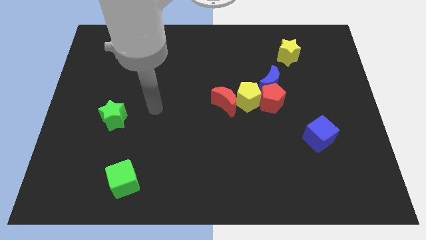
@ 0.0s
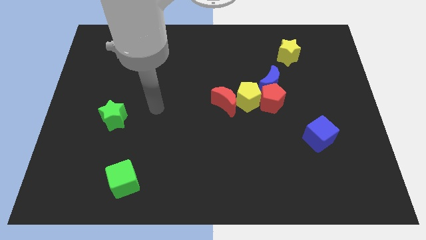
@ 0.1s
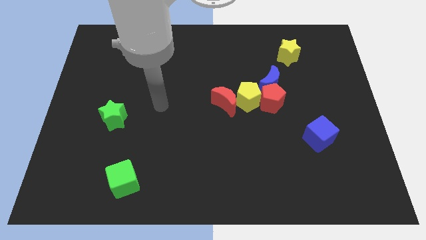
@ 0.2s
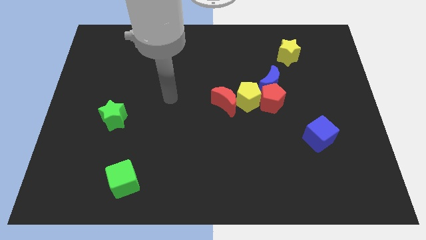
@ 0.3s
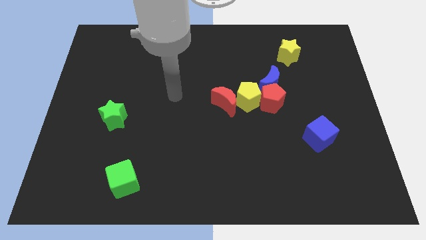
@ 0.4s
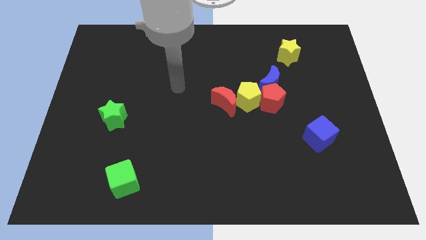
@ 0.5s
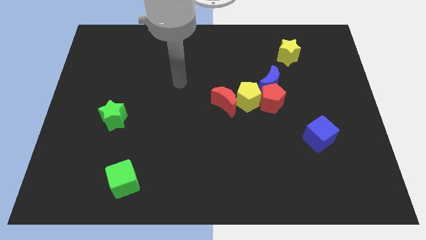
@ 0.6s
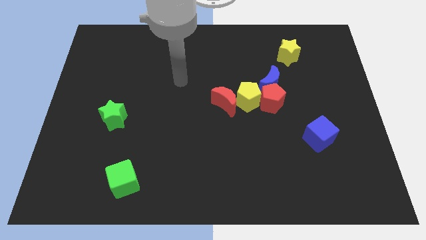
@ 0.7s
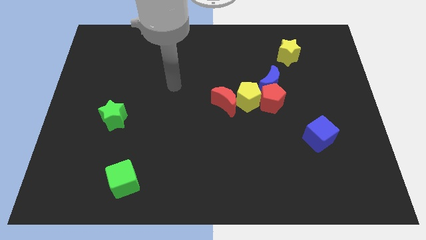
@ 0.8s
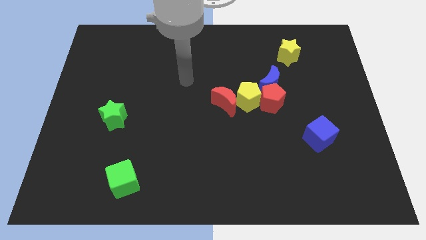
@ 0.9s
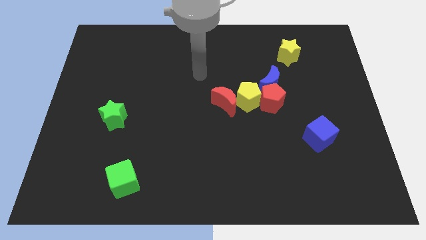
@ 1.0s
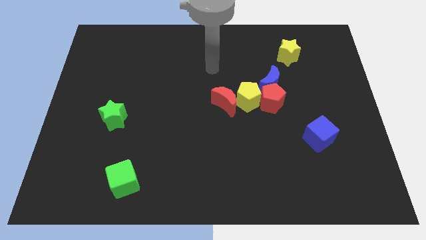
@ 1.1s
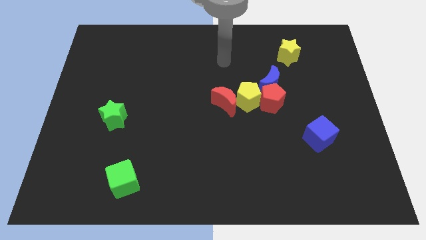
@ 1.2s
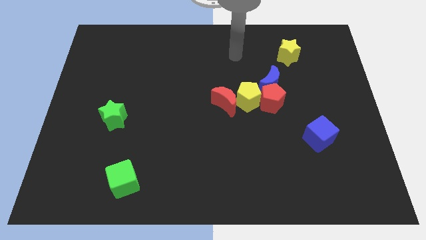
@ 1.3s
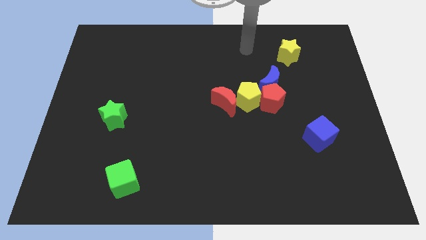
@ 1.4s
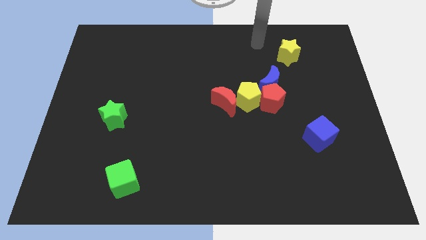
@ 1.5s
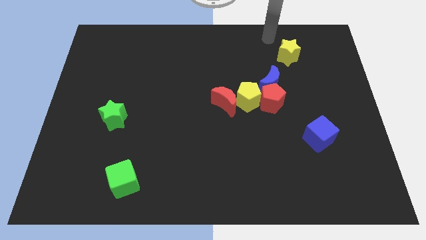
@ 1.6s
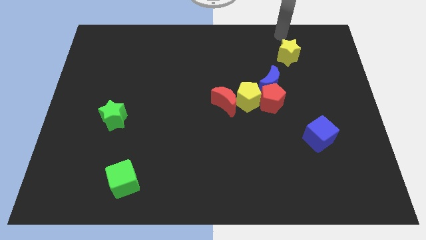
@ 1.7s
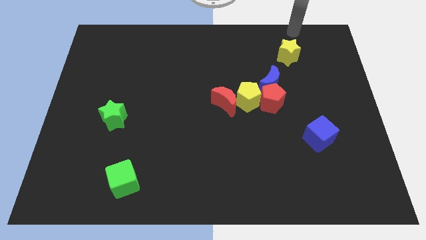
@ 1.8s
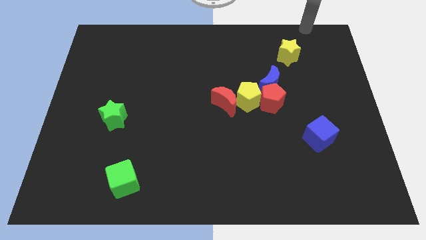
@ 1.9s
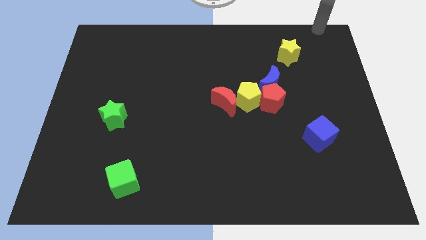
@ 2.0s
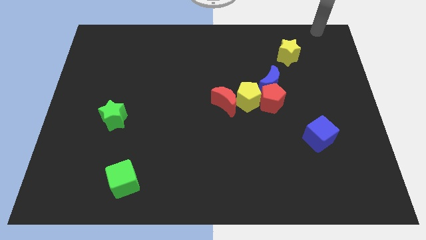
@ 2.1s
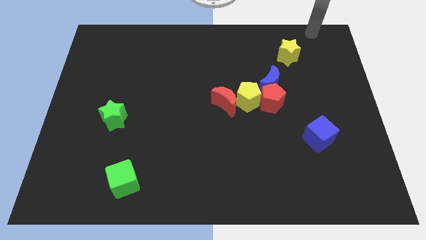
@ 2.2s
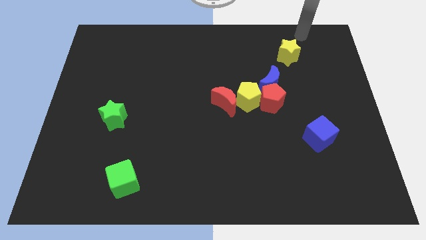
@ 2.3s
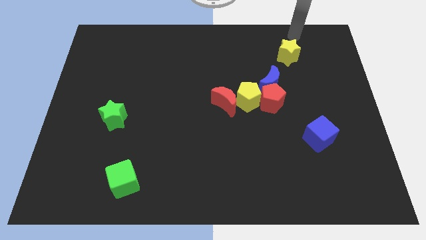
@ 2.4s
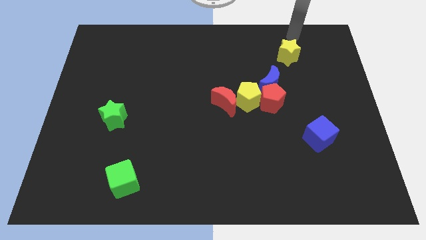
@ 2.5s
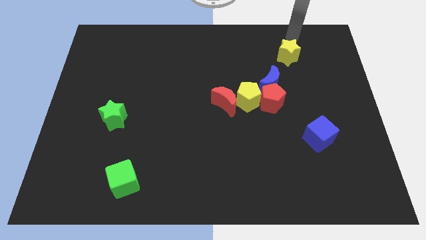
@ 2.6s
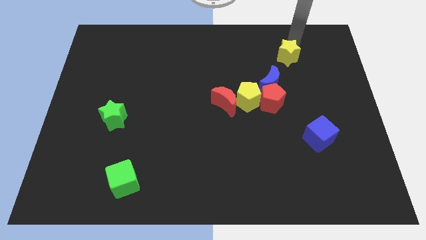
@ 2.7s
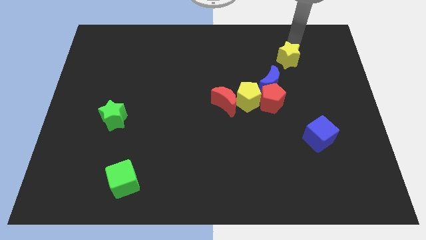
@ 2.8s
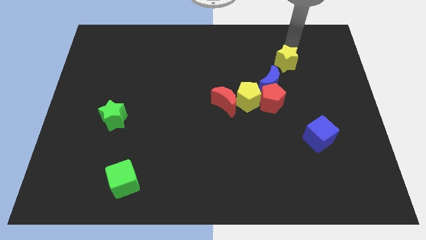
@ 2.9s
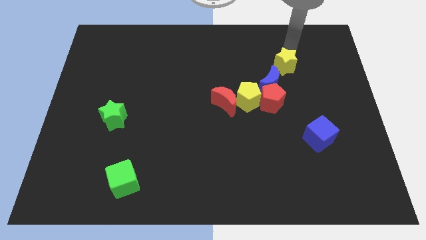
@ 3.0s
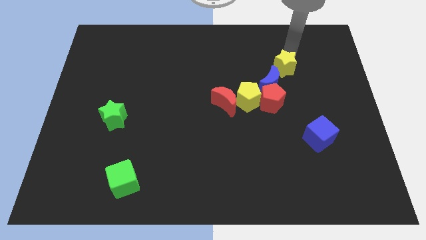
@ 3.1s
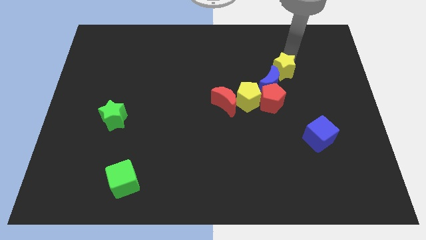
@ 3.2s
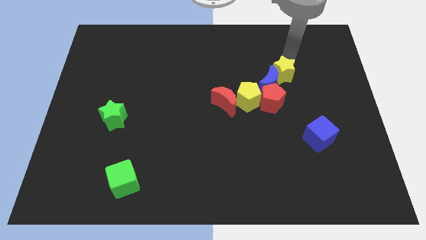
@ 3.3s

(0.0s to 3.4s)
move the yellow star into the top side of the blue crescent

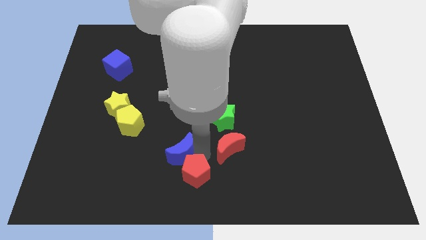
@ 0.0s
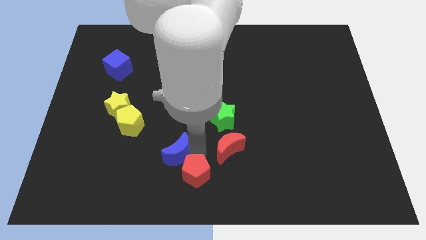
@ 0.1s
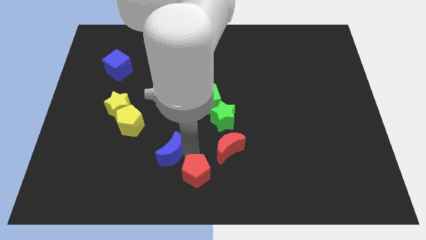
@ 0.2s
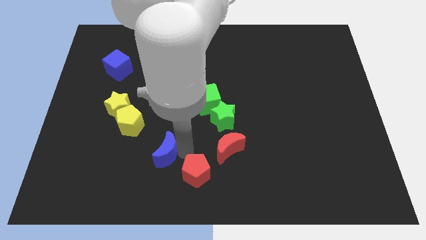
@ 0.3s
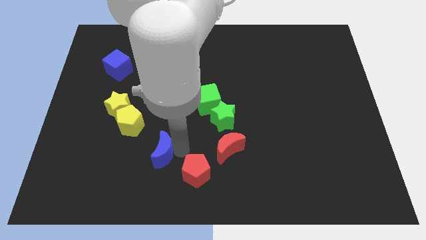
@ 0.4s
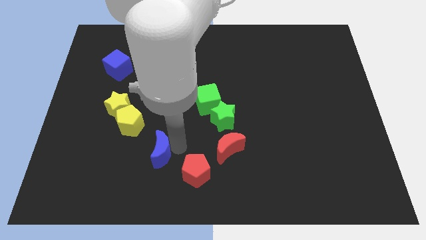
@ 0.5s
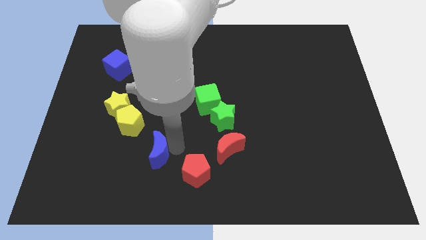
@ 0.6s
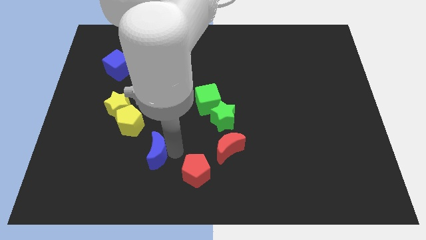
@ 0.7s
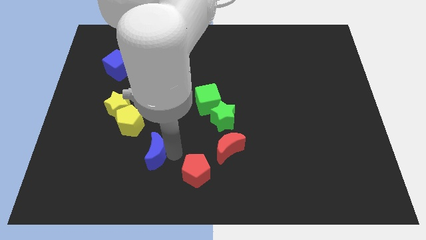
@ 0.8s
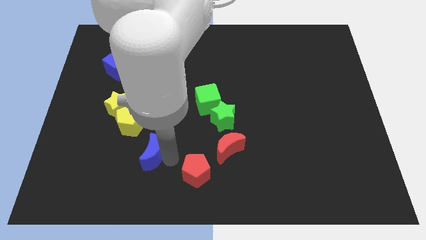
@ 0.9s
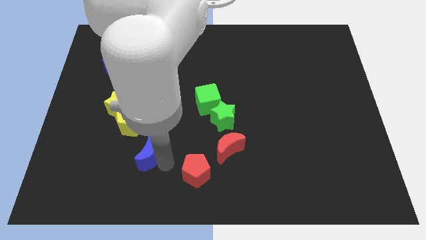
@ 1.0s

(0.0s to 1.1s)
push the blue crescent away from the red pentagon

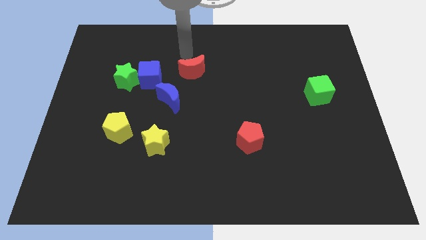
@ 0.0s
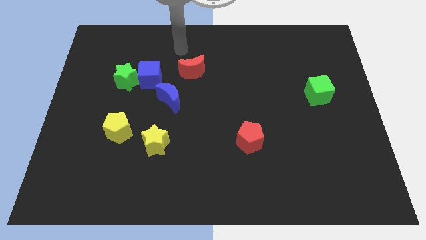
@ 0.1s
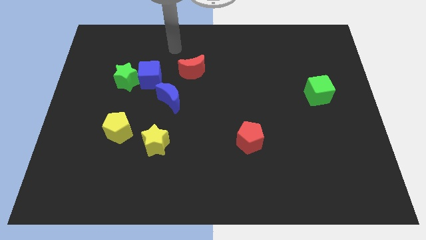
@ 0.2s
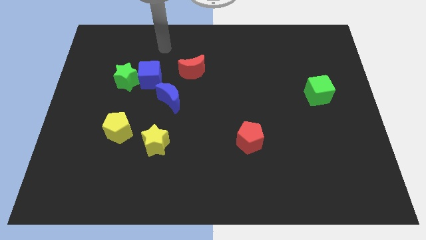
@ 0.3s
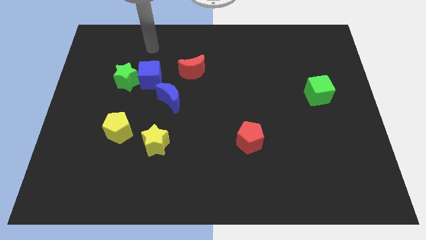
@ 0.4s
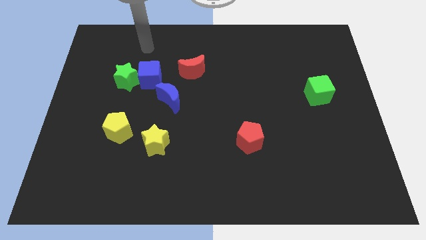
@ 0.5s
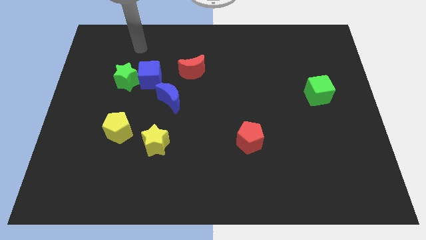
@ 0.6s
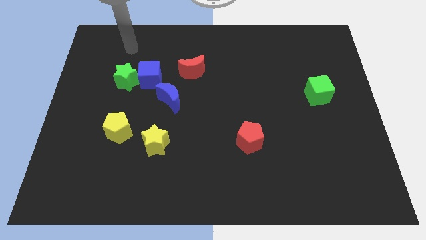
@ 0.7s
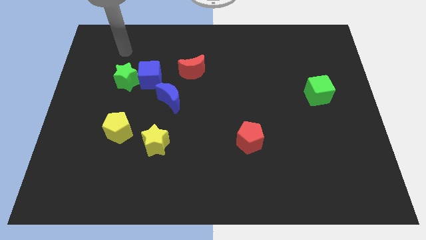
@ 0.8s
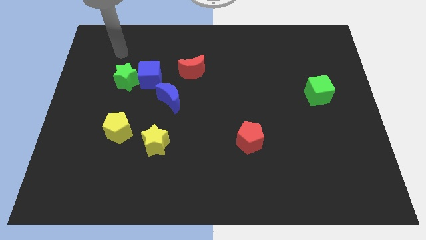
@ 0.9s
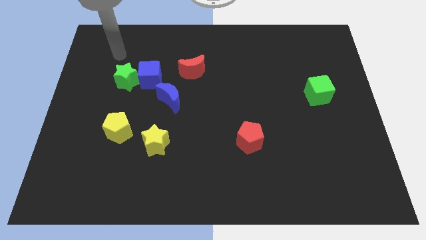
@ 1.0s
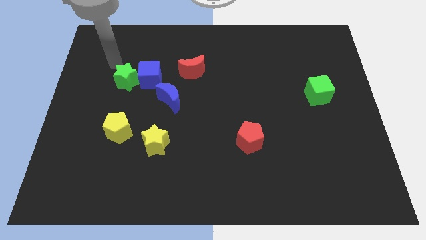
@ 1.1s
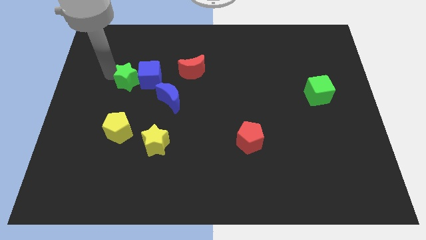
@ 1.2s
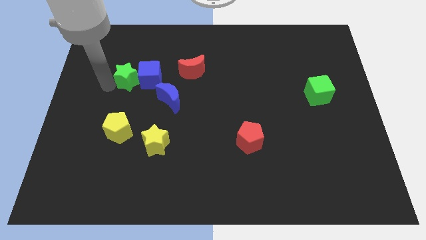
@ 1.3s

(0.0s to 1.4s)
move your arm to the left of green star

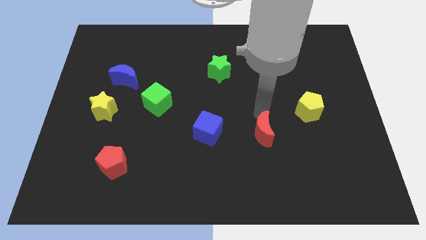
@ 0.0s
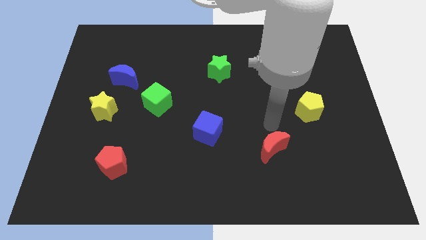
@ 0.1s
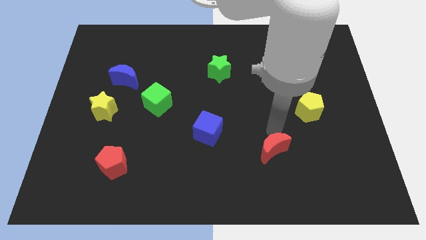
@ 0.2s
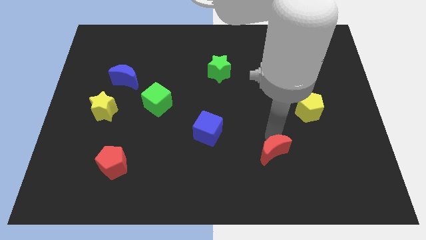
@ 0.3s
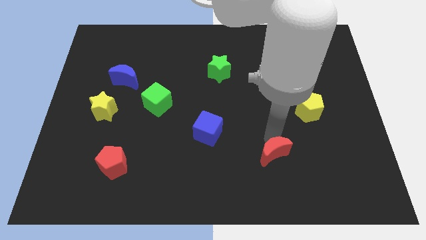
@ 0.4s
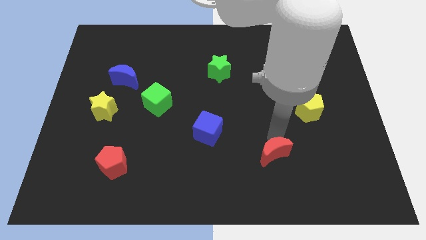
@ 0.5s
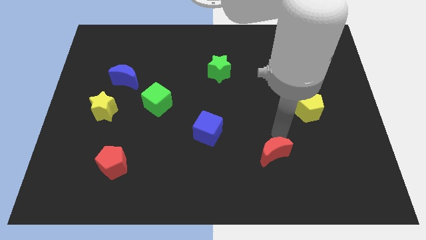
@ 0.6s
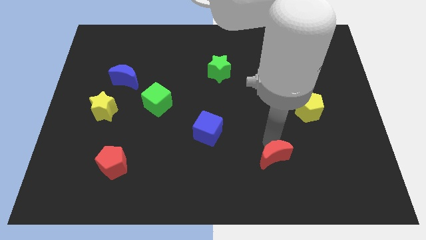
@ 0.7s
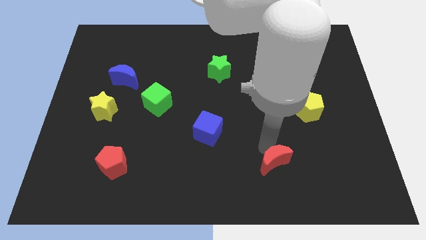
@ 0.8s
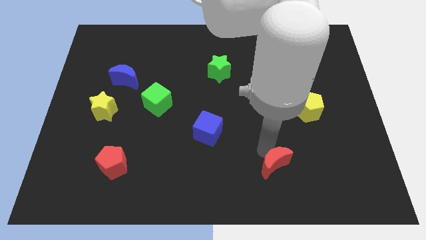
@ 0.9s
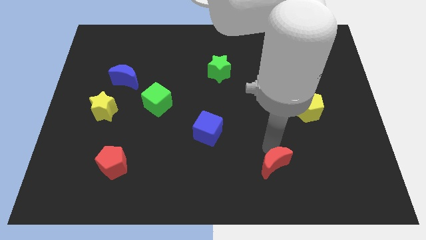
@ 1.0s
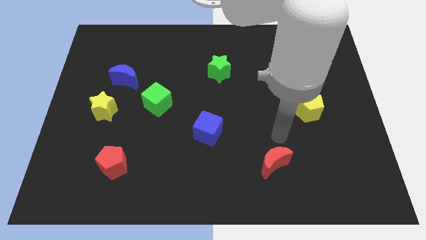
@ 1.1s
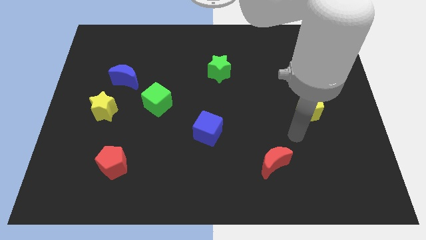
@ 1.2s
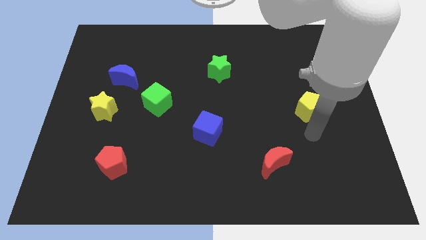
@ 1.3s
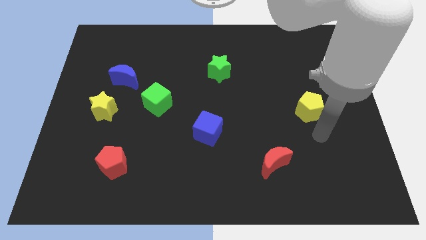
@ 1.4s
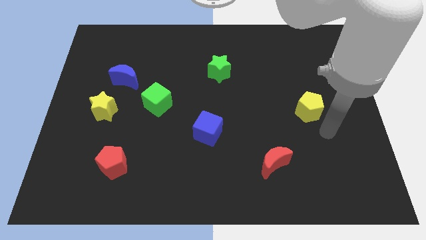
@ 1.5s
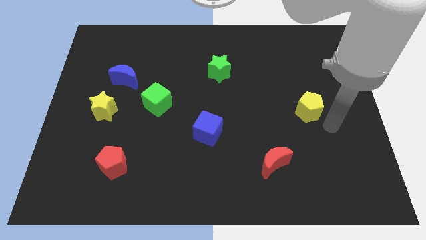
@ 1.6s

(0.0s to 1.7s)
place the red crescent diagonally on the bottom left side of the yellow pentagon

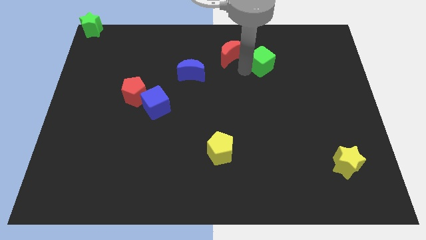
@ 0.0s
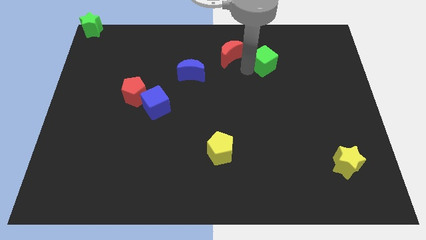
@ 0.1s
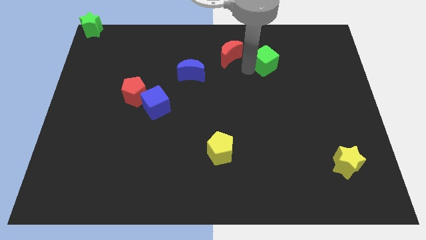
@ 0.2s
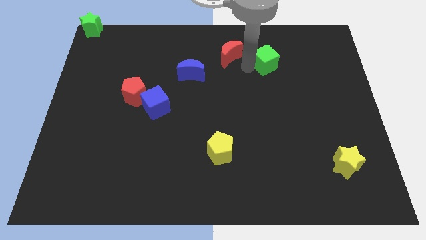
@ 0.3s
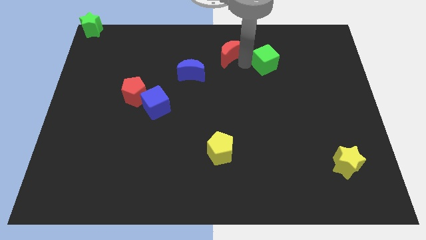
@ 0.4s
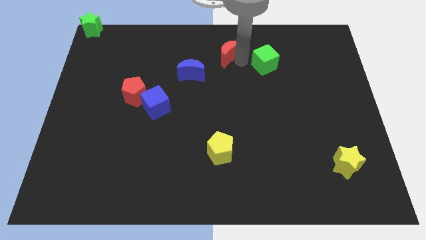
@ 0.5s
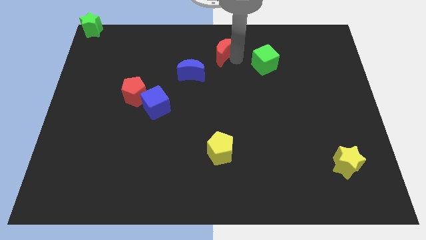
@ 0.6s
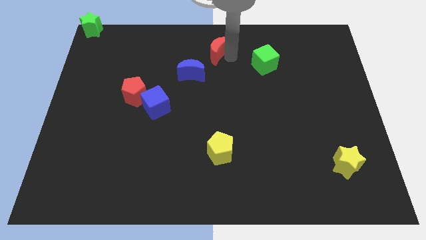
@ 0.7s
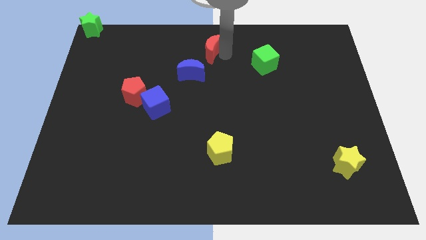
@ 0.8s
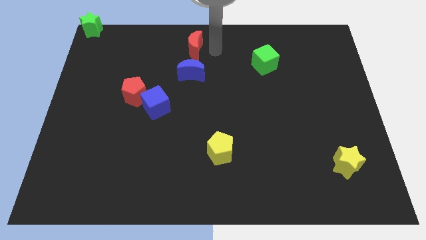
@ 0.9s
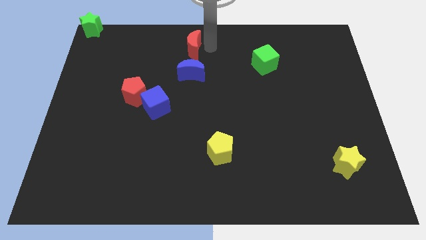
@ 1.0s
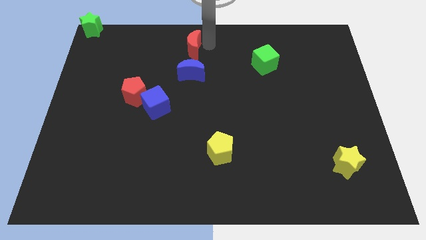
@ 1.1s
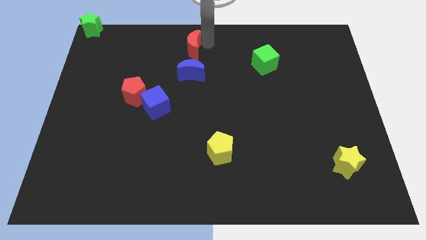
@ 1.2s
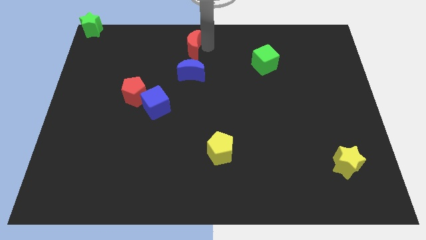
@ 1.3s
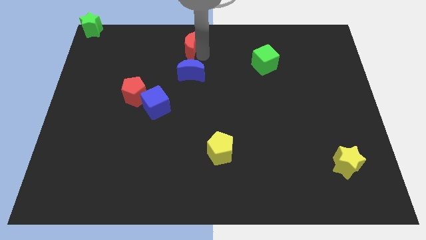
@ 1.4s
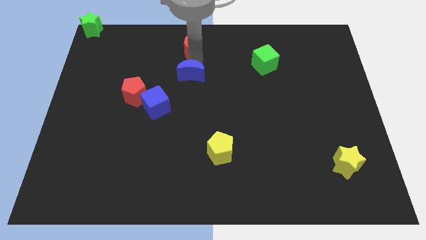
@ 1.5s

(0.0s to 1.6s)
place red moon to the top of blue moon
